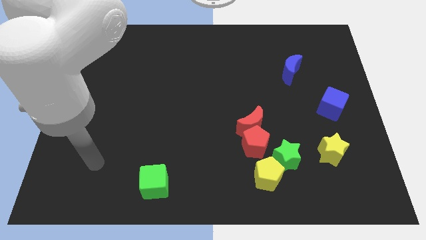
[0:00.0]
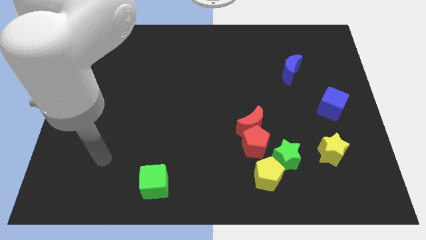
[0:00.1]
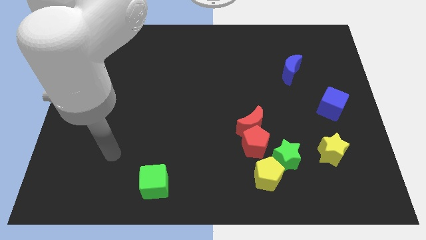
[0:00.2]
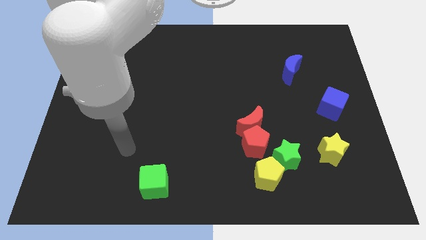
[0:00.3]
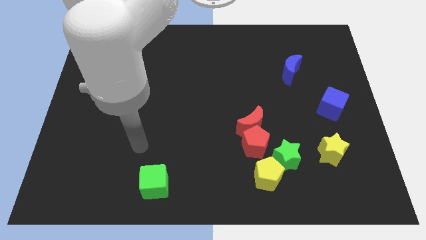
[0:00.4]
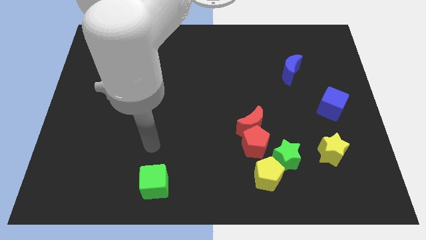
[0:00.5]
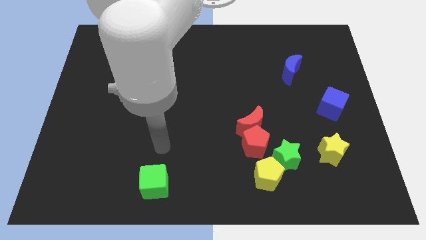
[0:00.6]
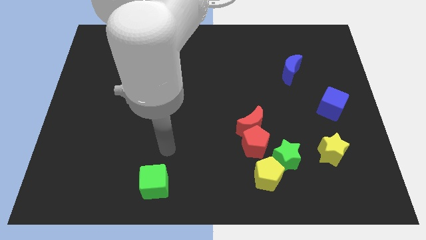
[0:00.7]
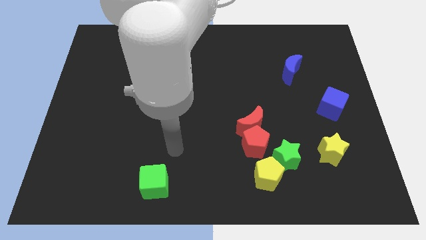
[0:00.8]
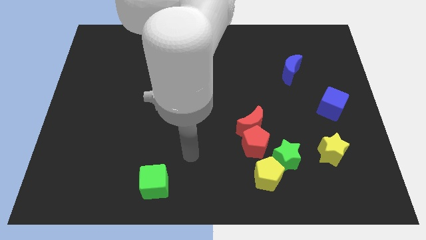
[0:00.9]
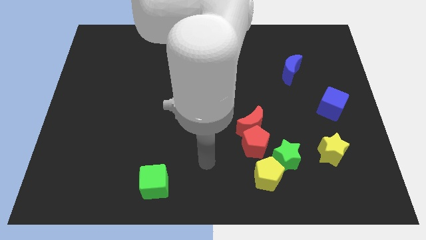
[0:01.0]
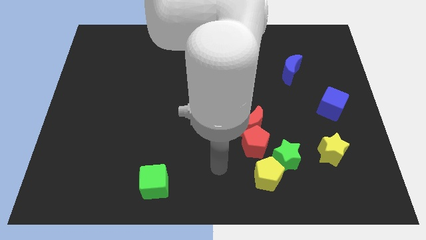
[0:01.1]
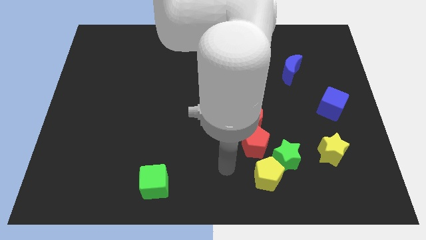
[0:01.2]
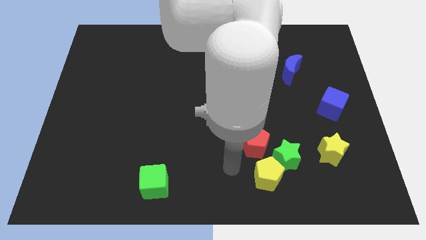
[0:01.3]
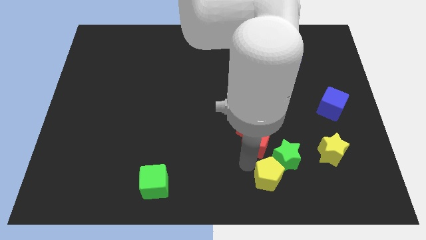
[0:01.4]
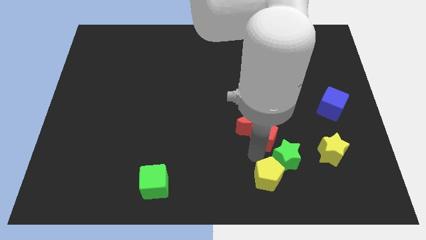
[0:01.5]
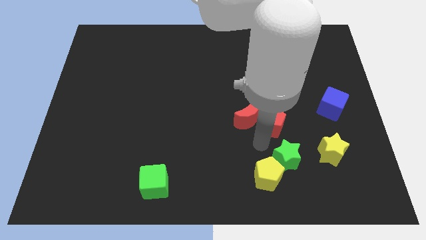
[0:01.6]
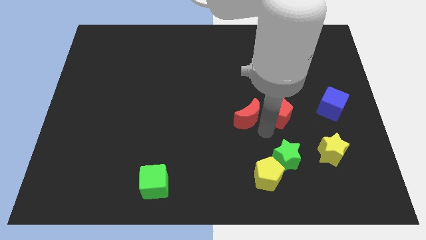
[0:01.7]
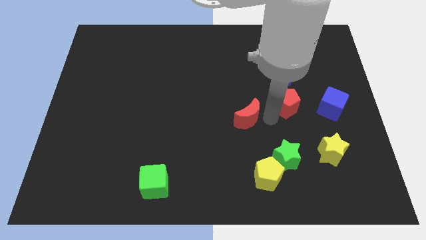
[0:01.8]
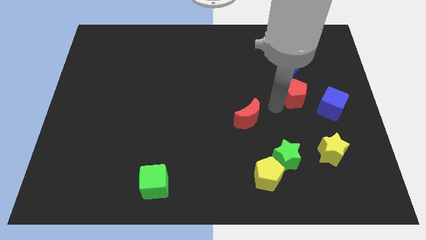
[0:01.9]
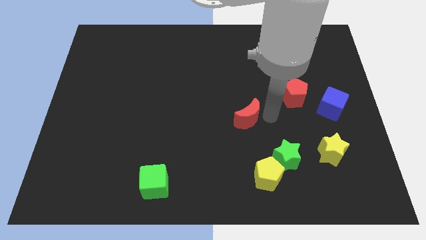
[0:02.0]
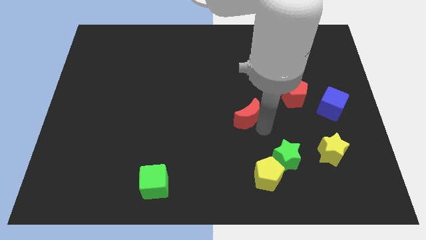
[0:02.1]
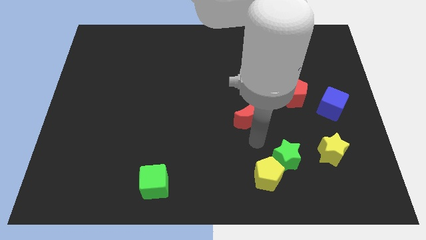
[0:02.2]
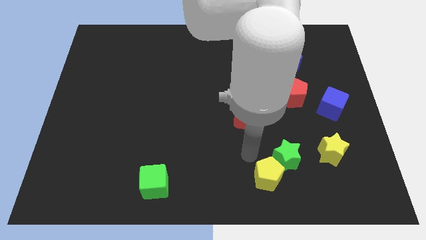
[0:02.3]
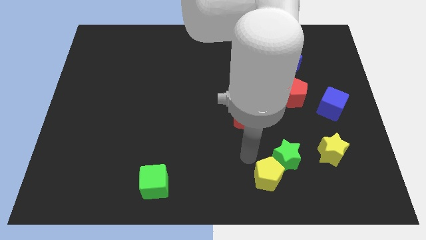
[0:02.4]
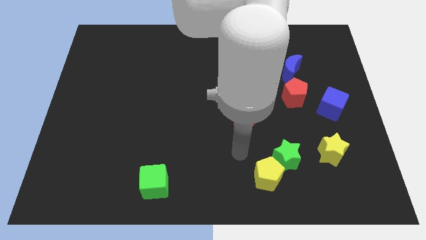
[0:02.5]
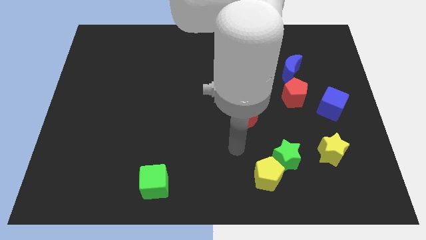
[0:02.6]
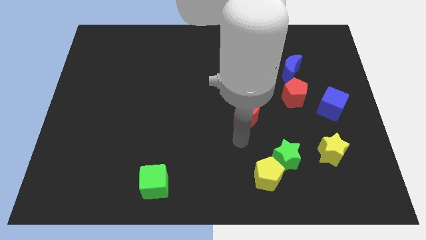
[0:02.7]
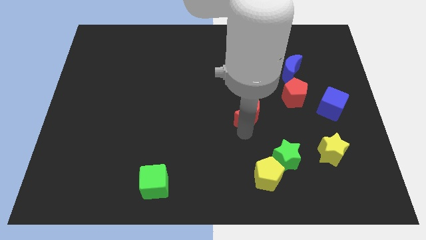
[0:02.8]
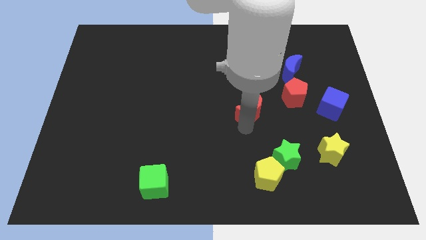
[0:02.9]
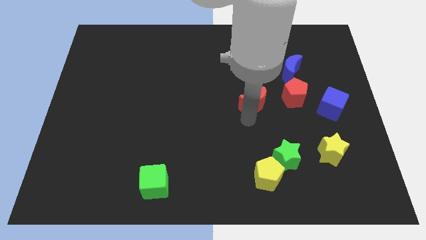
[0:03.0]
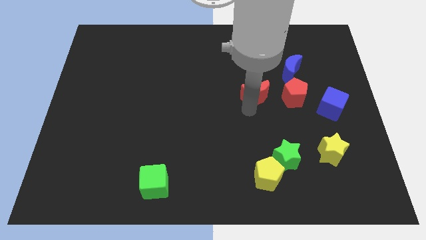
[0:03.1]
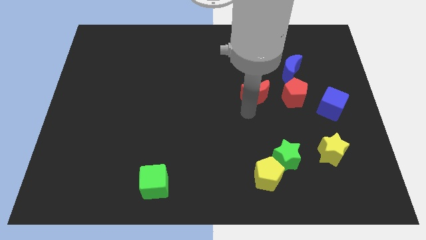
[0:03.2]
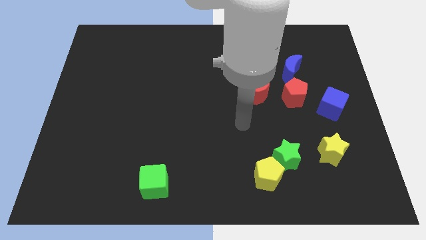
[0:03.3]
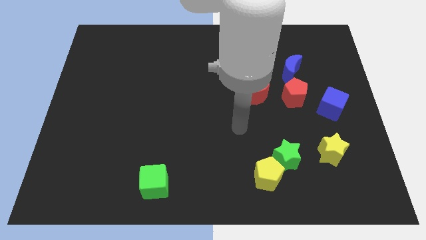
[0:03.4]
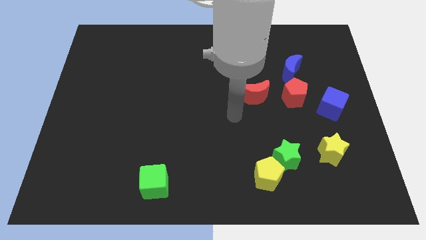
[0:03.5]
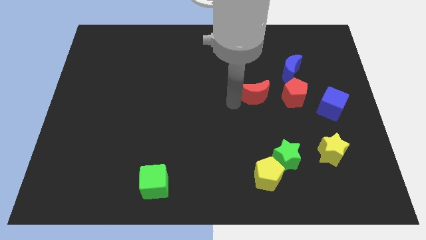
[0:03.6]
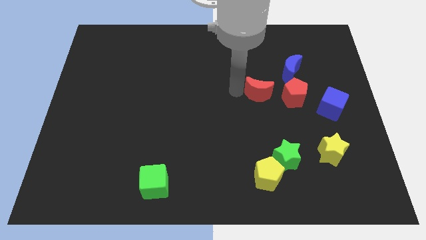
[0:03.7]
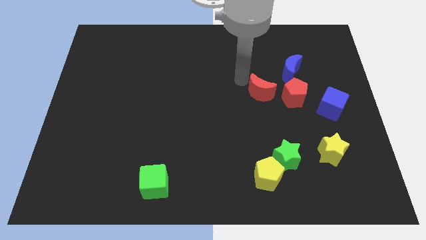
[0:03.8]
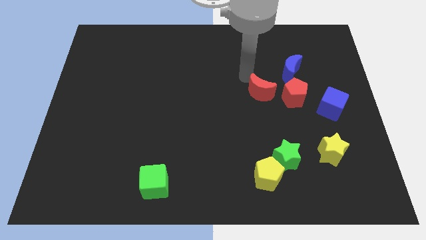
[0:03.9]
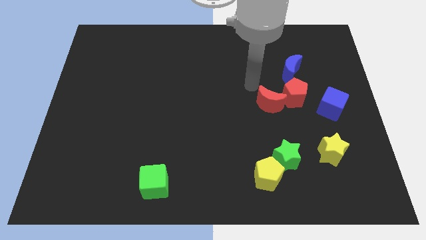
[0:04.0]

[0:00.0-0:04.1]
push red crescent and red pentagon to the bottom side of the blue moon

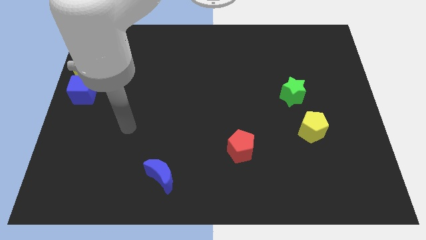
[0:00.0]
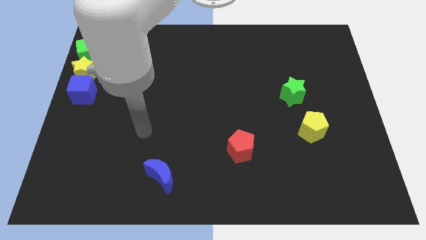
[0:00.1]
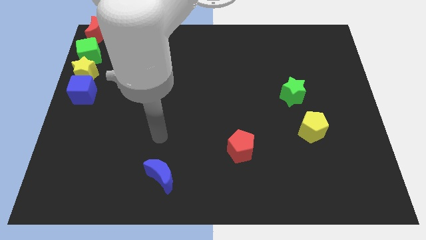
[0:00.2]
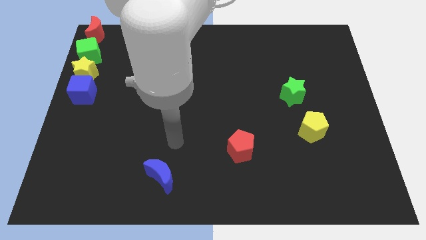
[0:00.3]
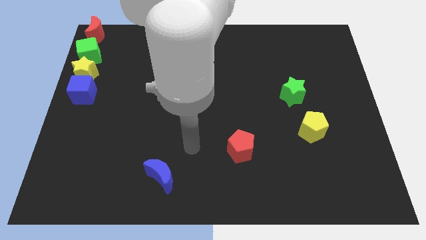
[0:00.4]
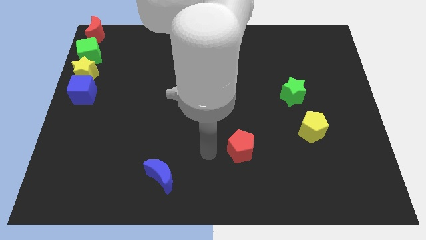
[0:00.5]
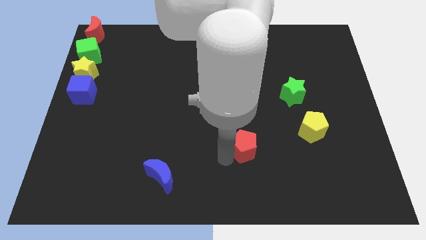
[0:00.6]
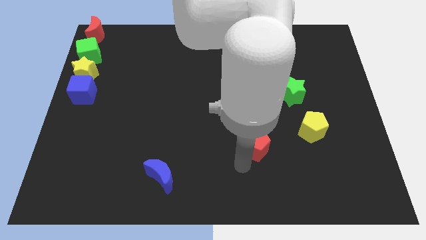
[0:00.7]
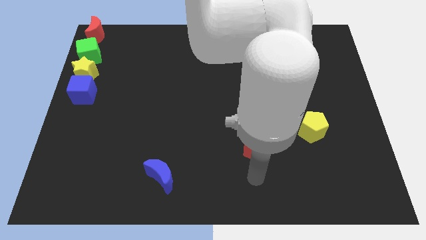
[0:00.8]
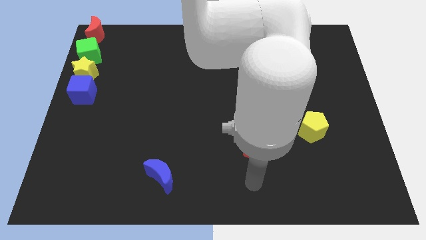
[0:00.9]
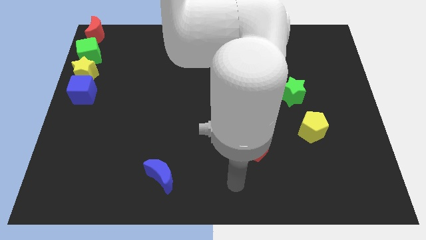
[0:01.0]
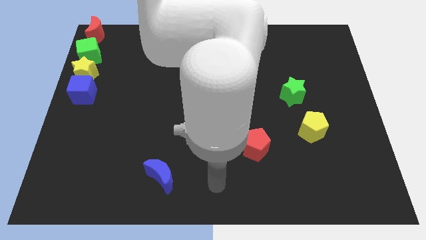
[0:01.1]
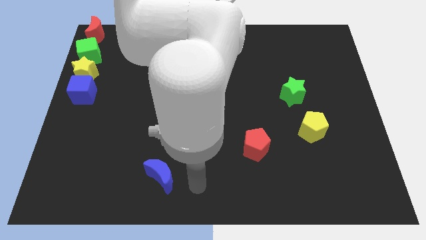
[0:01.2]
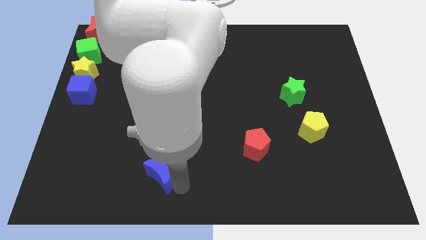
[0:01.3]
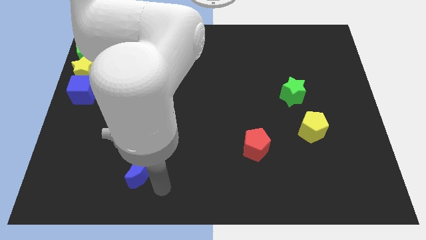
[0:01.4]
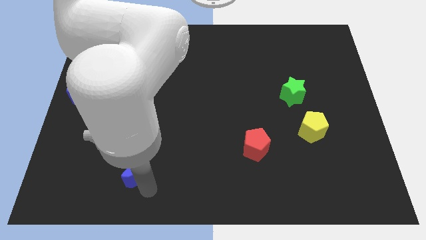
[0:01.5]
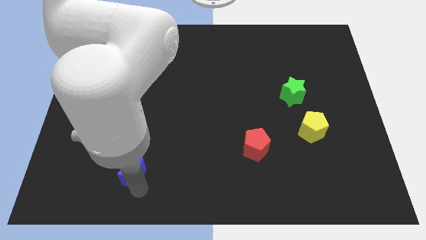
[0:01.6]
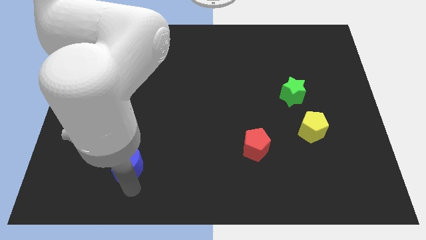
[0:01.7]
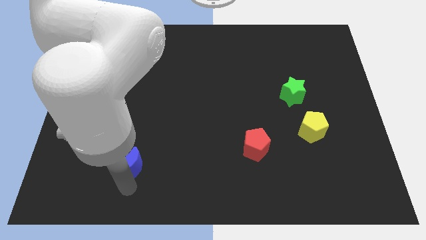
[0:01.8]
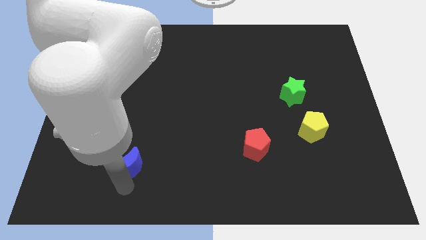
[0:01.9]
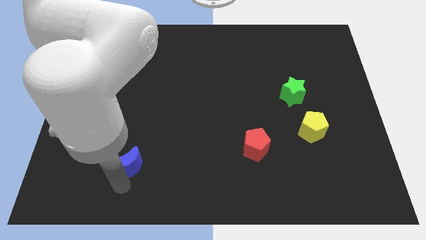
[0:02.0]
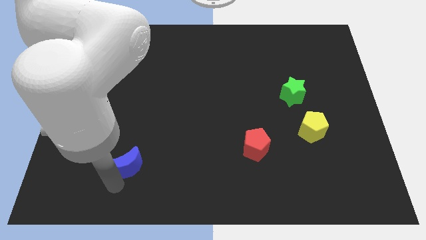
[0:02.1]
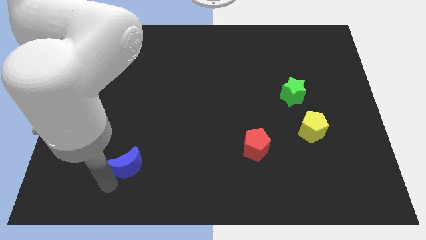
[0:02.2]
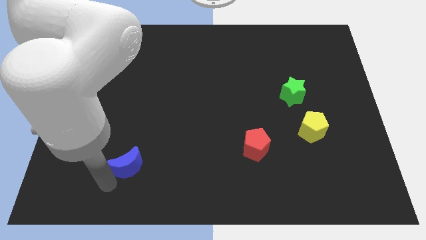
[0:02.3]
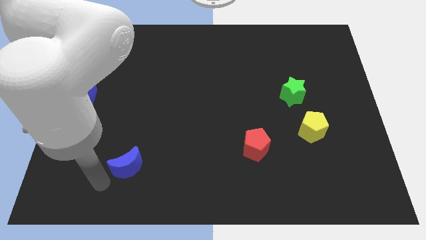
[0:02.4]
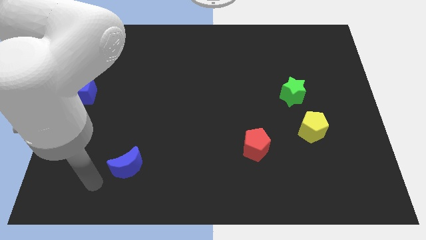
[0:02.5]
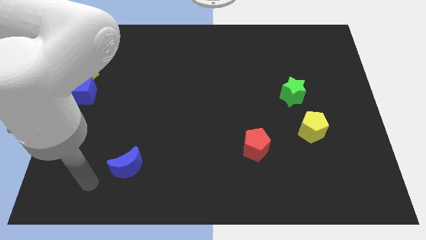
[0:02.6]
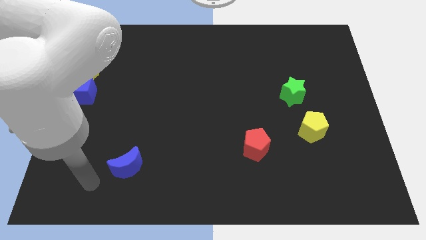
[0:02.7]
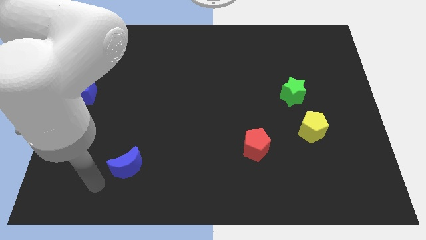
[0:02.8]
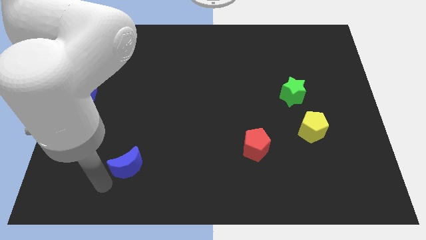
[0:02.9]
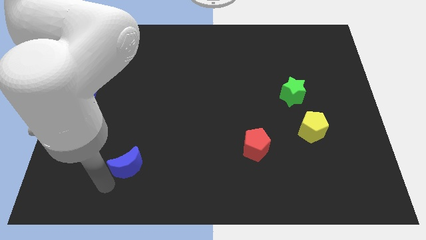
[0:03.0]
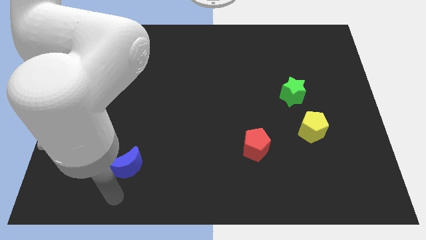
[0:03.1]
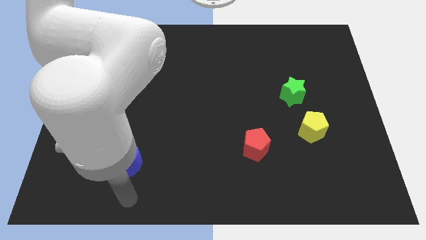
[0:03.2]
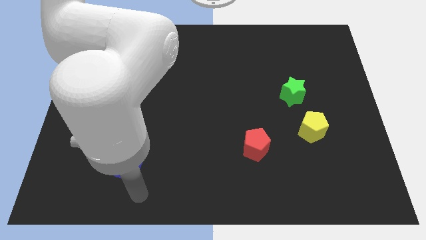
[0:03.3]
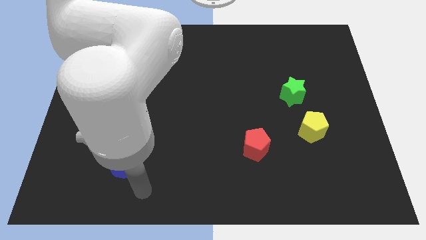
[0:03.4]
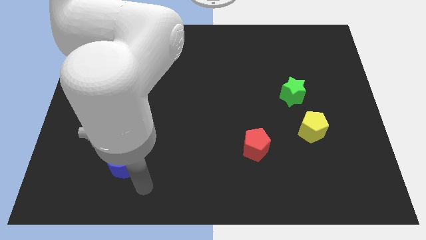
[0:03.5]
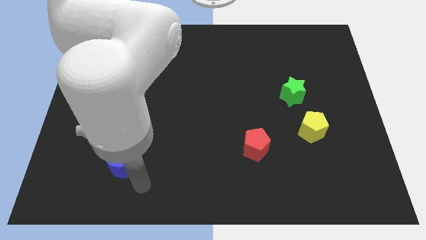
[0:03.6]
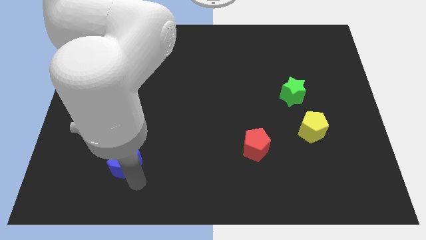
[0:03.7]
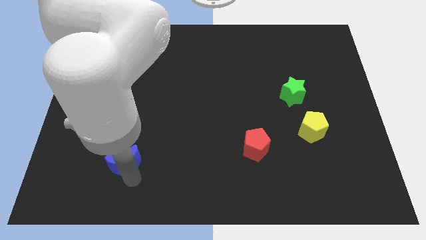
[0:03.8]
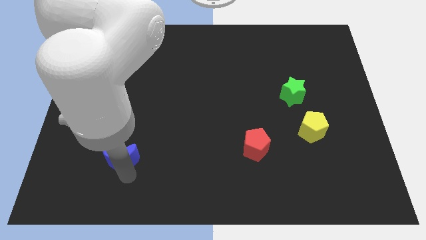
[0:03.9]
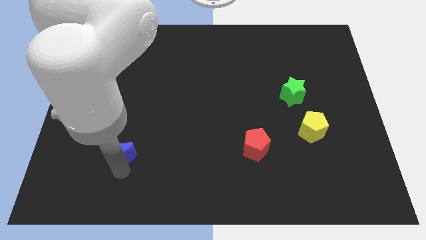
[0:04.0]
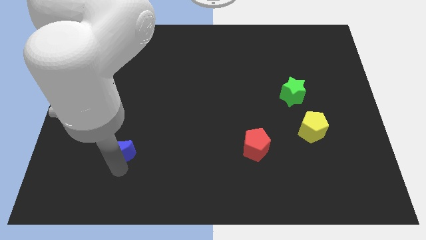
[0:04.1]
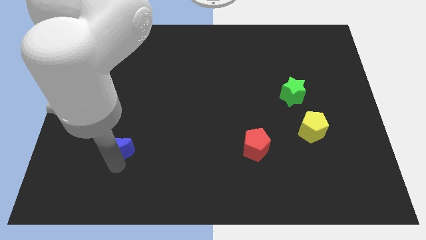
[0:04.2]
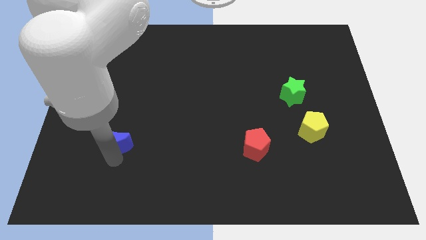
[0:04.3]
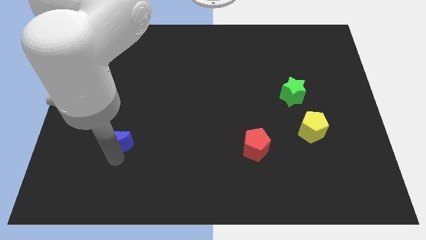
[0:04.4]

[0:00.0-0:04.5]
move the blue crescent slightly towards the blue cube

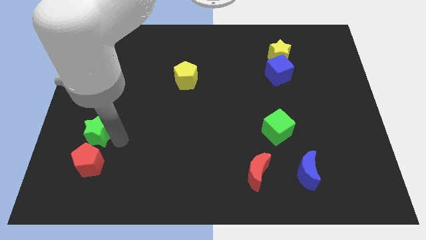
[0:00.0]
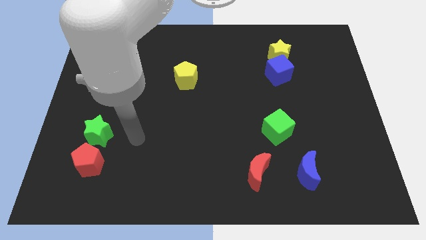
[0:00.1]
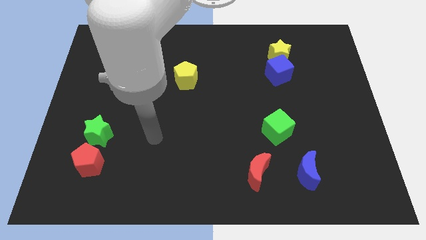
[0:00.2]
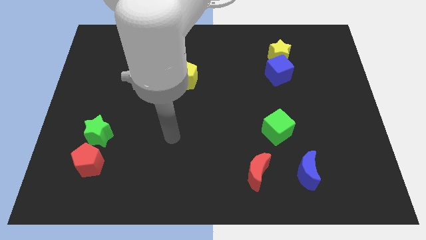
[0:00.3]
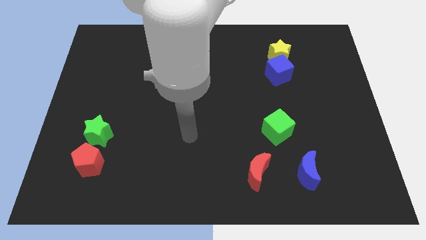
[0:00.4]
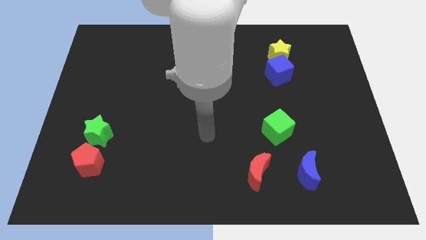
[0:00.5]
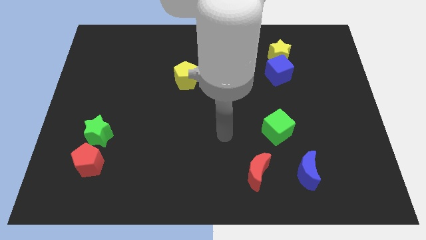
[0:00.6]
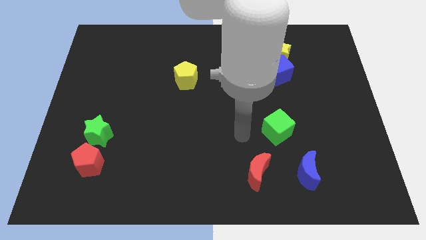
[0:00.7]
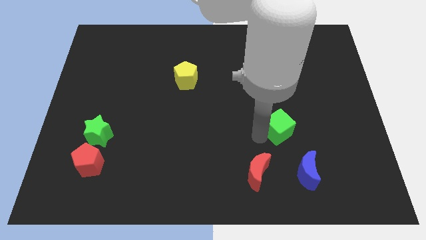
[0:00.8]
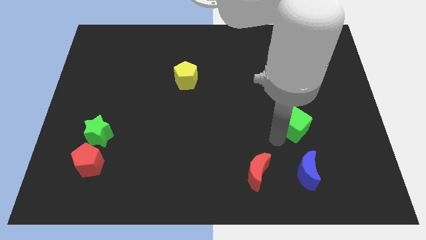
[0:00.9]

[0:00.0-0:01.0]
move your arm left to the green cube
